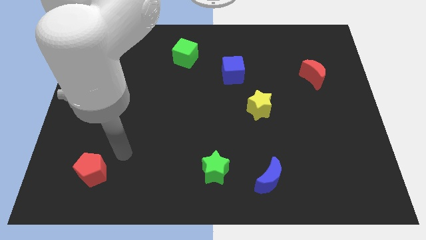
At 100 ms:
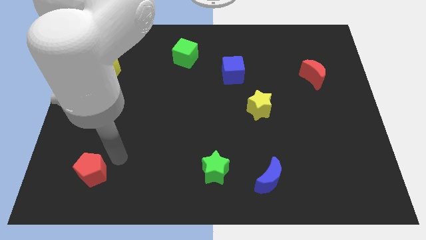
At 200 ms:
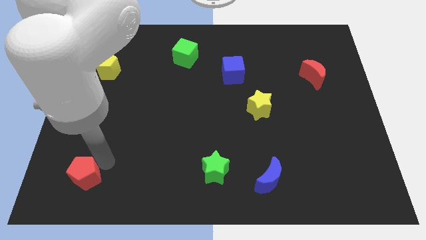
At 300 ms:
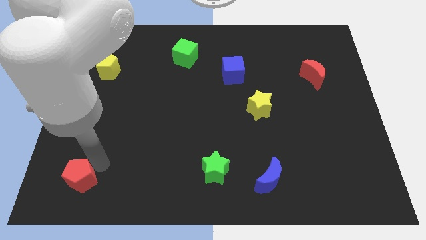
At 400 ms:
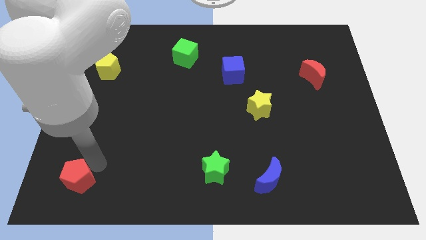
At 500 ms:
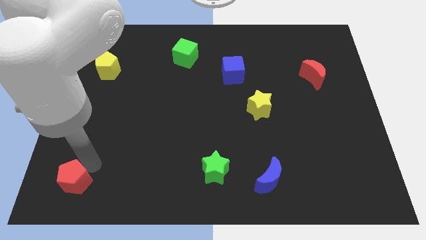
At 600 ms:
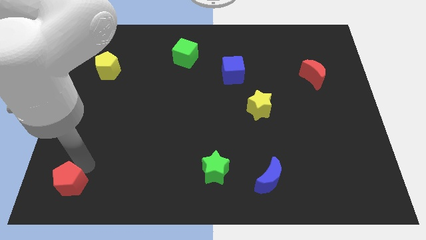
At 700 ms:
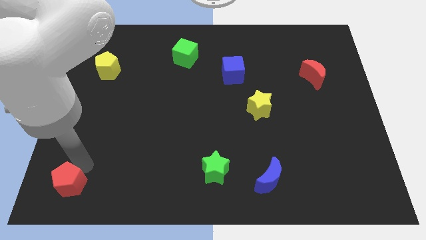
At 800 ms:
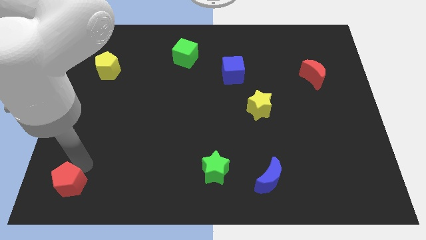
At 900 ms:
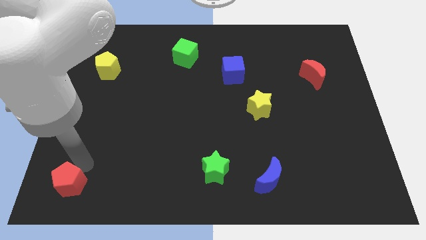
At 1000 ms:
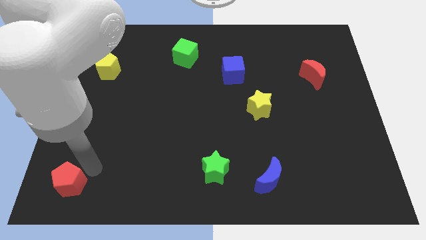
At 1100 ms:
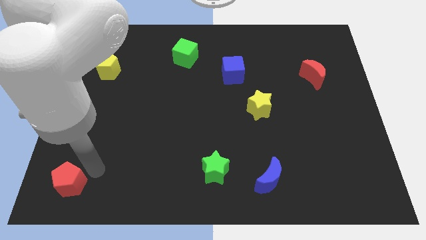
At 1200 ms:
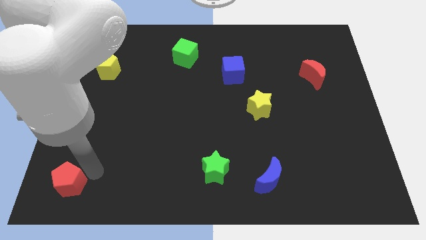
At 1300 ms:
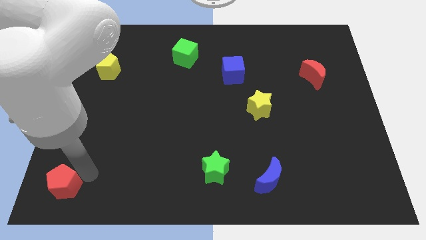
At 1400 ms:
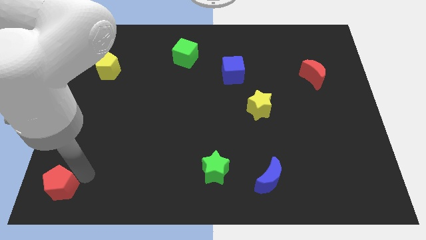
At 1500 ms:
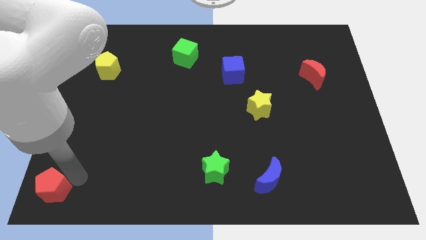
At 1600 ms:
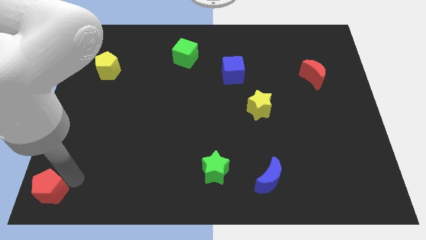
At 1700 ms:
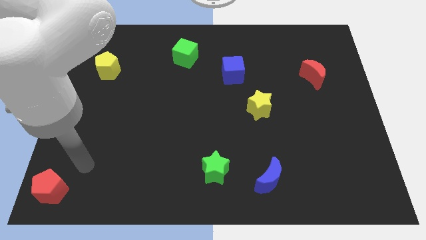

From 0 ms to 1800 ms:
move the red pentagon to the bottom left corner

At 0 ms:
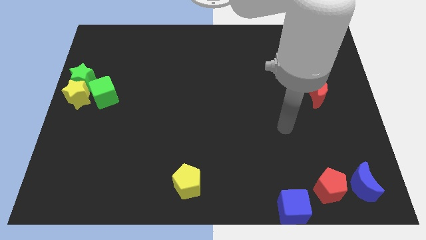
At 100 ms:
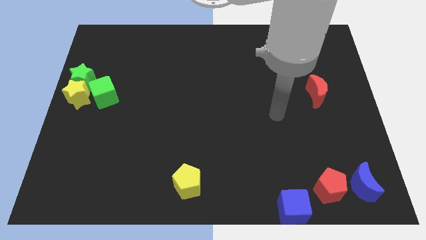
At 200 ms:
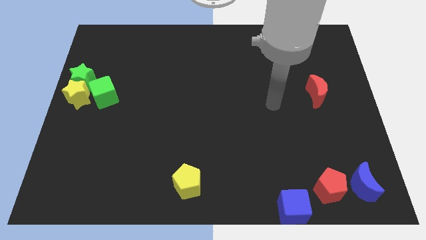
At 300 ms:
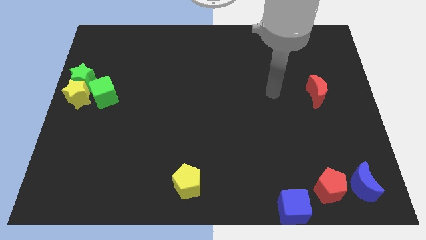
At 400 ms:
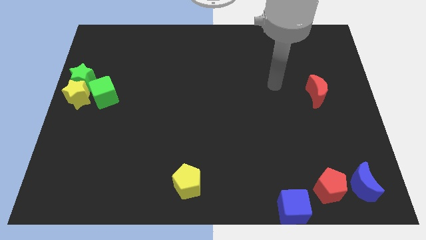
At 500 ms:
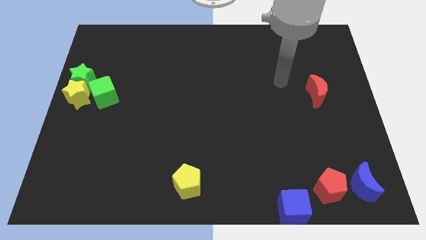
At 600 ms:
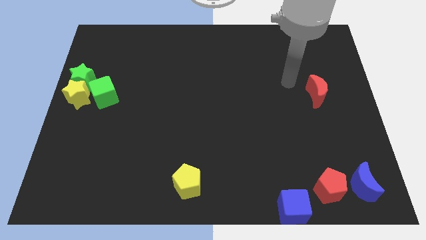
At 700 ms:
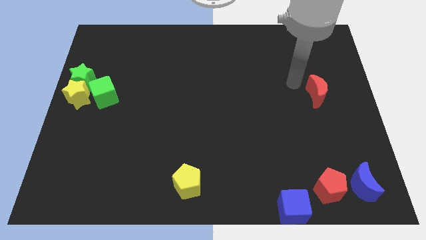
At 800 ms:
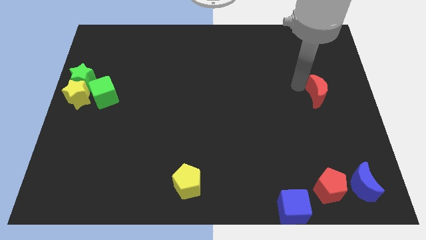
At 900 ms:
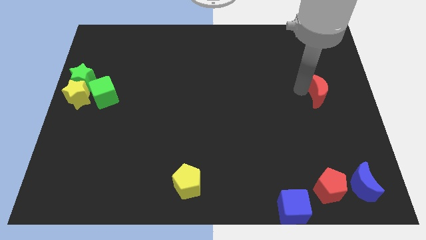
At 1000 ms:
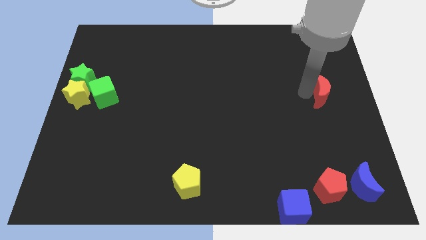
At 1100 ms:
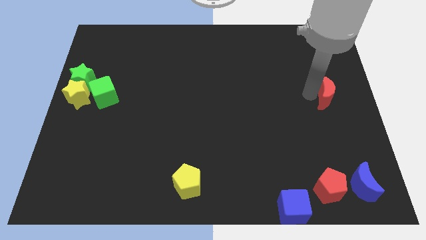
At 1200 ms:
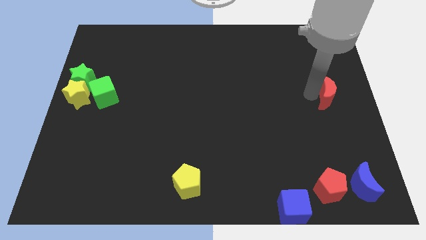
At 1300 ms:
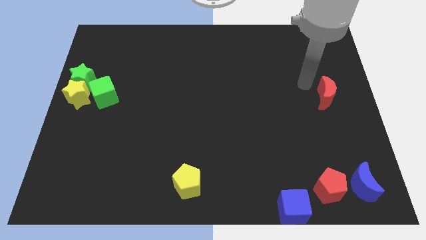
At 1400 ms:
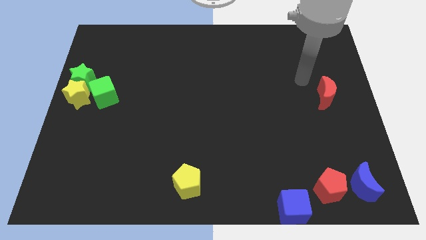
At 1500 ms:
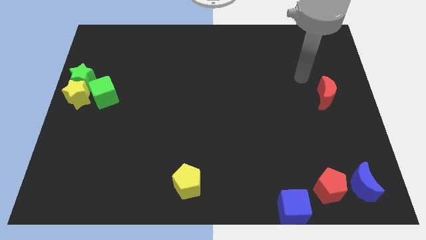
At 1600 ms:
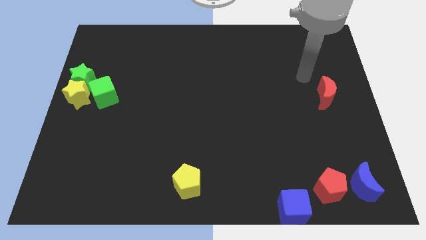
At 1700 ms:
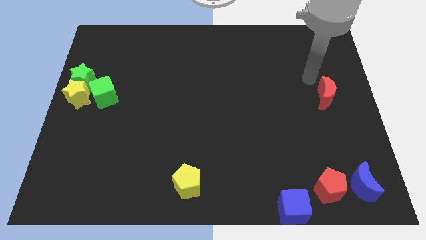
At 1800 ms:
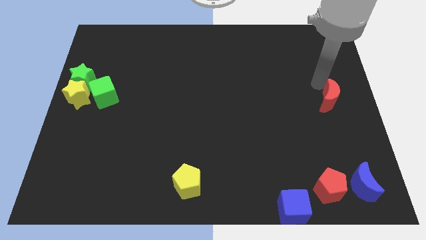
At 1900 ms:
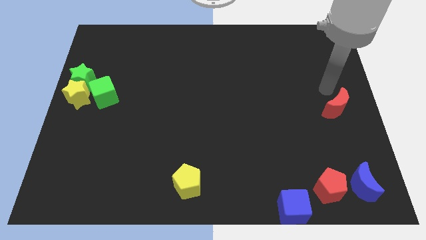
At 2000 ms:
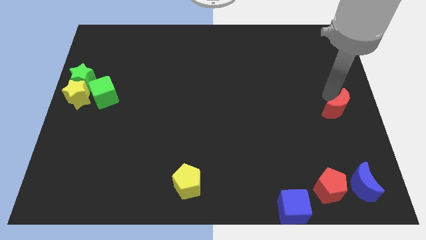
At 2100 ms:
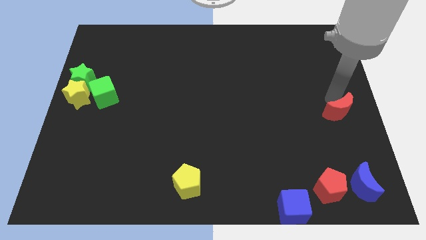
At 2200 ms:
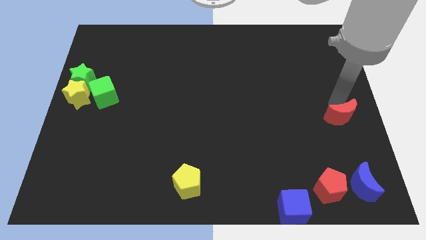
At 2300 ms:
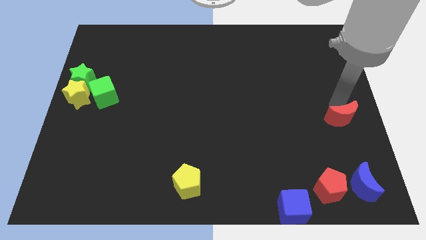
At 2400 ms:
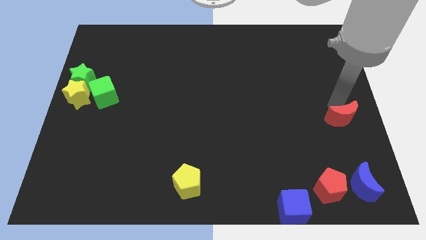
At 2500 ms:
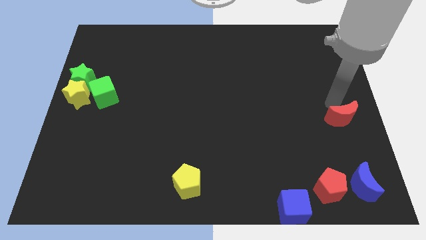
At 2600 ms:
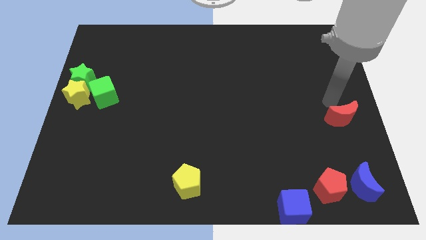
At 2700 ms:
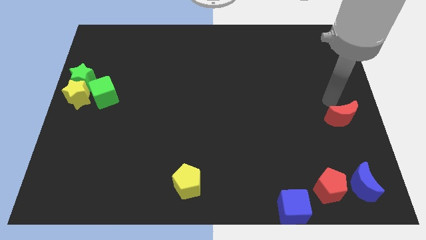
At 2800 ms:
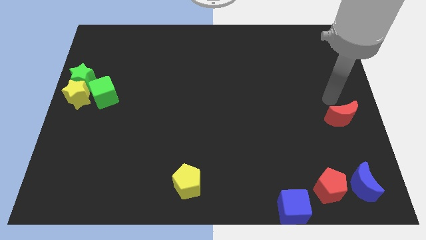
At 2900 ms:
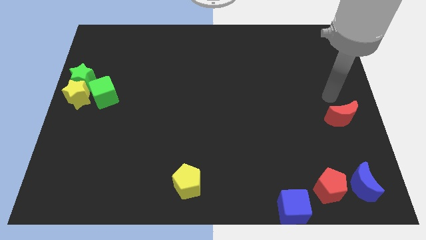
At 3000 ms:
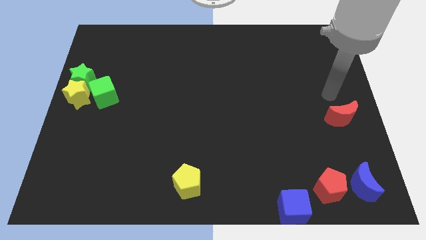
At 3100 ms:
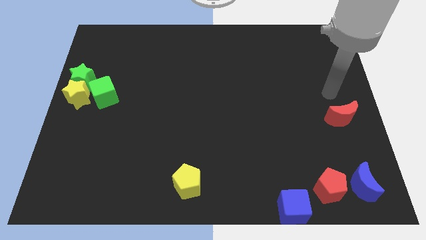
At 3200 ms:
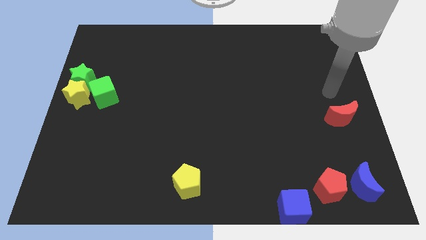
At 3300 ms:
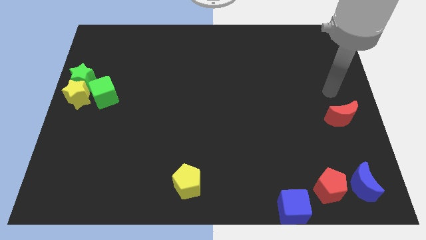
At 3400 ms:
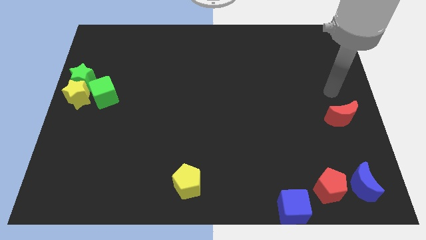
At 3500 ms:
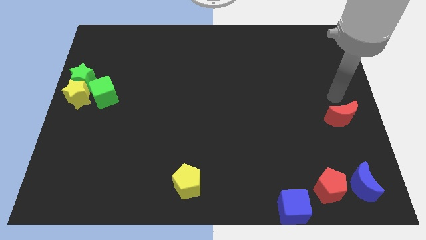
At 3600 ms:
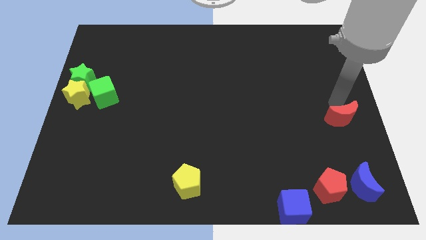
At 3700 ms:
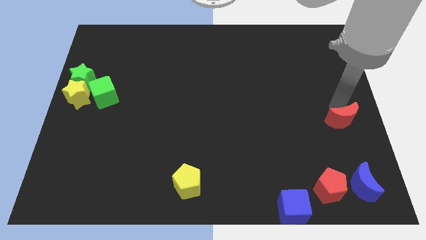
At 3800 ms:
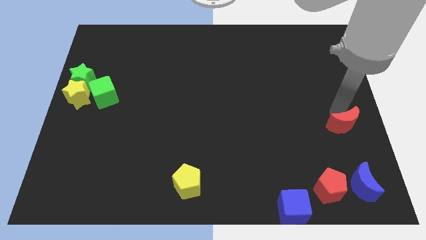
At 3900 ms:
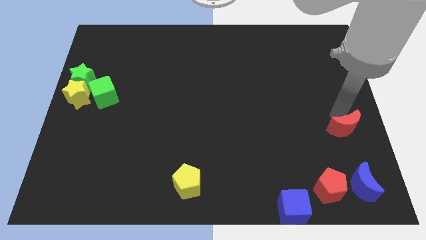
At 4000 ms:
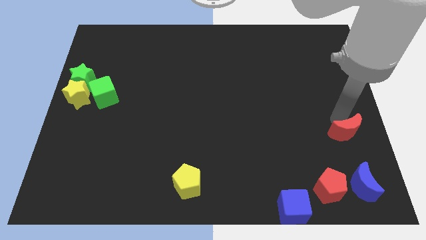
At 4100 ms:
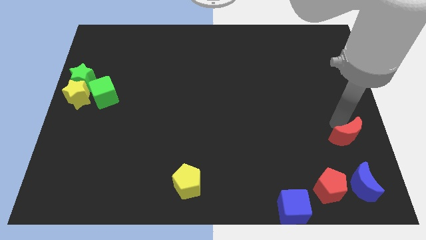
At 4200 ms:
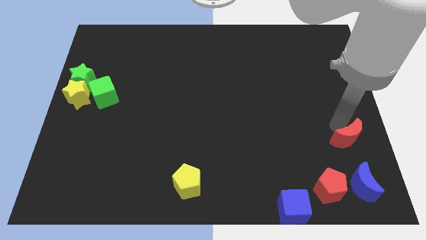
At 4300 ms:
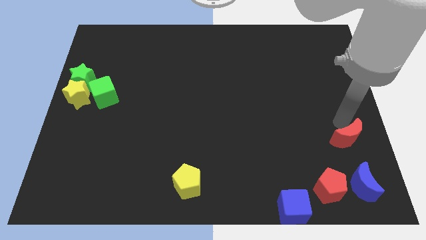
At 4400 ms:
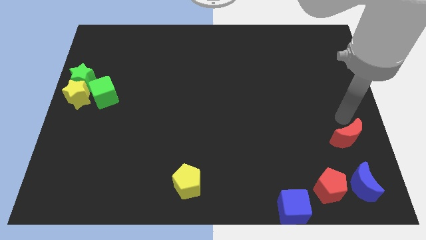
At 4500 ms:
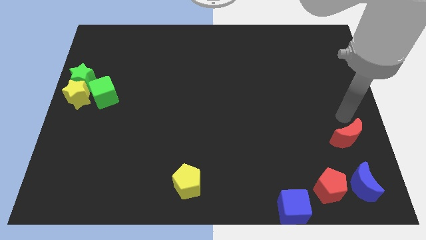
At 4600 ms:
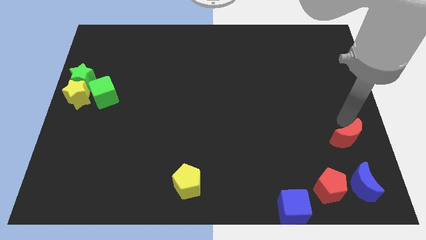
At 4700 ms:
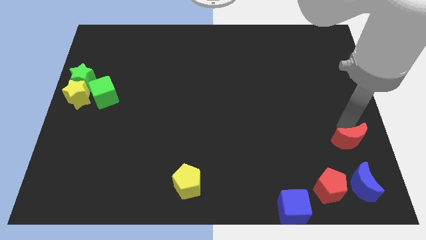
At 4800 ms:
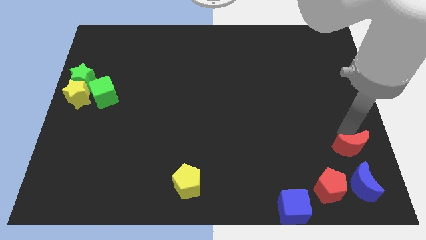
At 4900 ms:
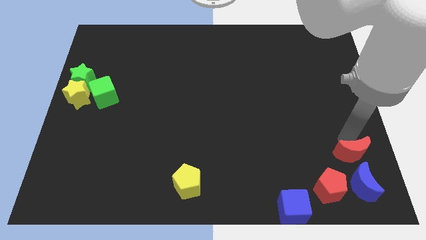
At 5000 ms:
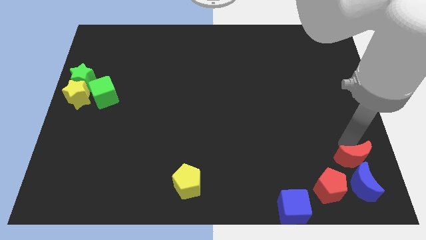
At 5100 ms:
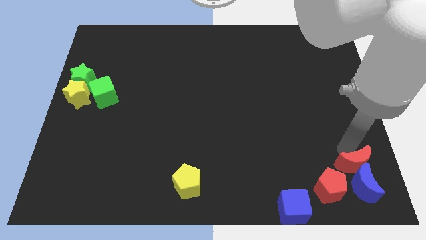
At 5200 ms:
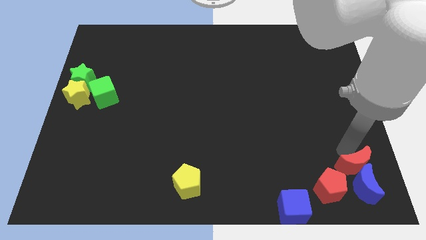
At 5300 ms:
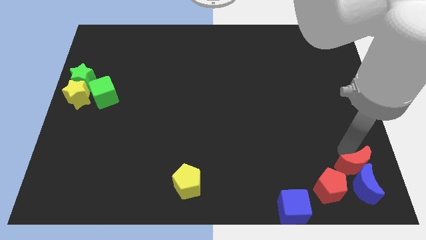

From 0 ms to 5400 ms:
push the red crescent into the top side of the blue crescent

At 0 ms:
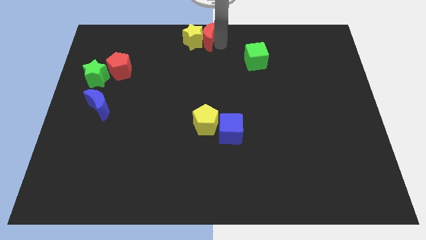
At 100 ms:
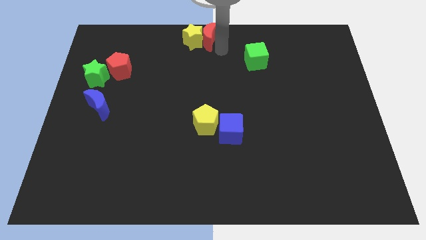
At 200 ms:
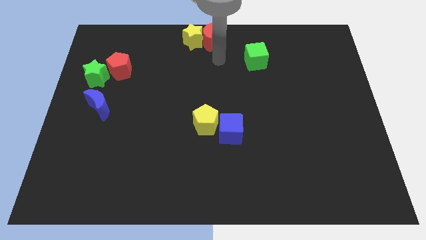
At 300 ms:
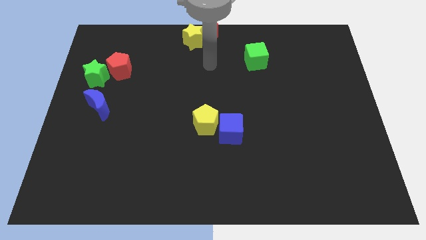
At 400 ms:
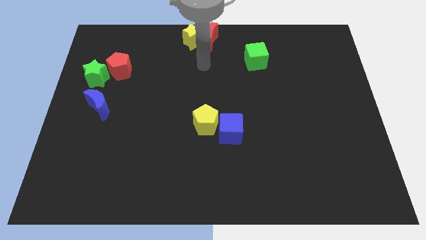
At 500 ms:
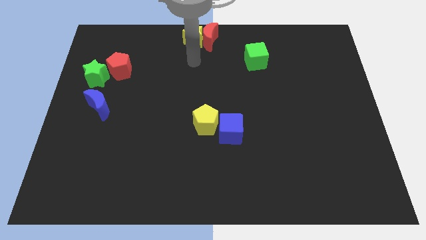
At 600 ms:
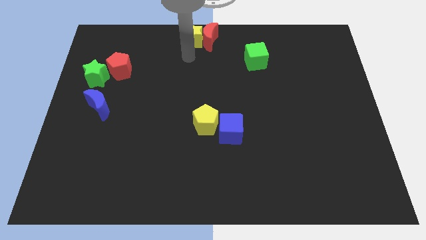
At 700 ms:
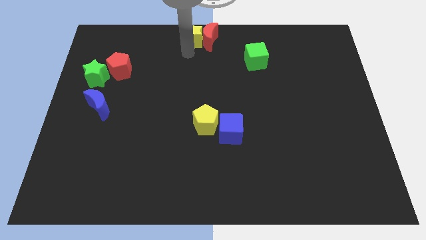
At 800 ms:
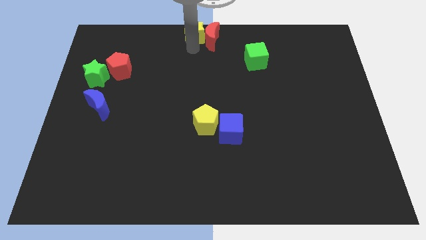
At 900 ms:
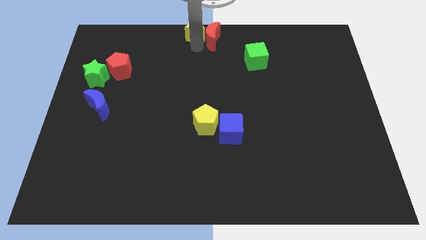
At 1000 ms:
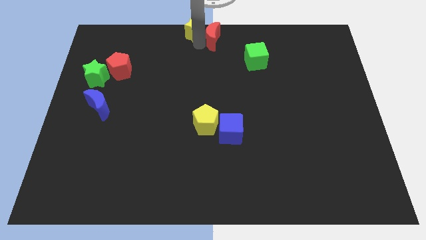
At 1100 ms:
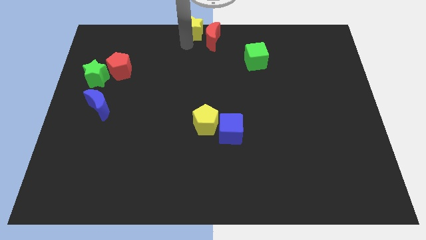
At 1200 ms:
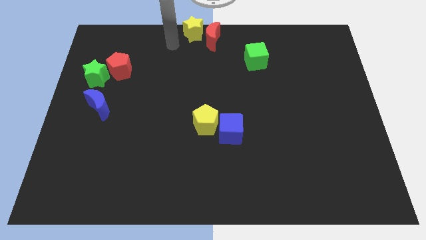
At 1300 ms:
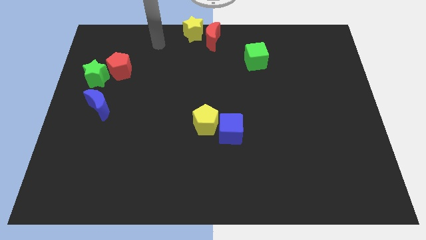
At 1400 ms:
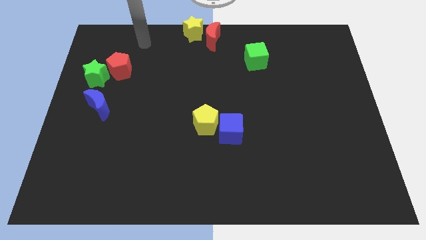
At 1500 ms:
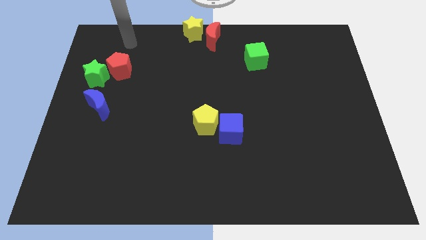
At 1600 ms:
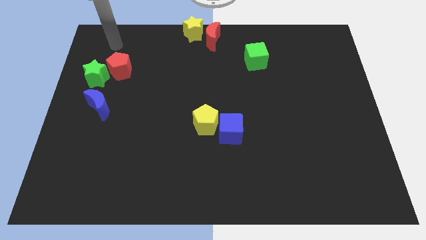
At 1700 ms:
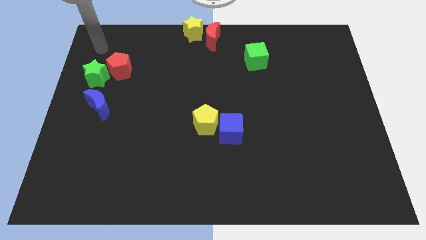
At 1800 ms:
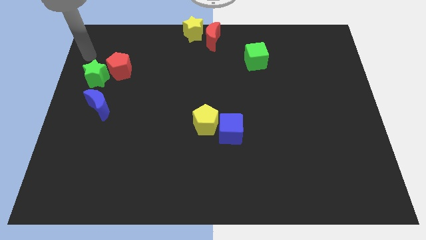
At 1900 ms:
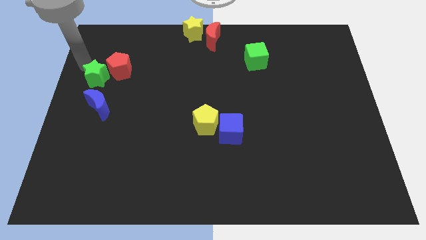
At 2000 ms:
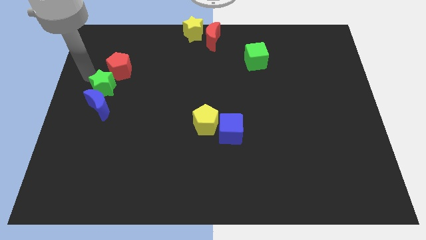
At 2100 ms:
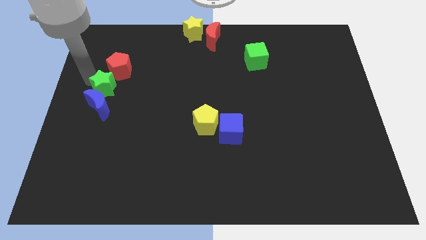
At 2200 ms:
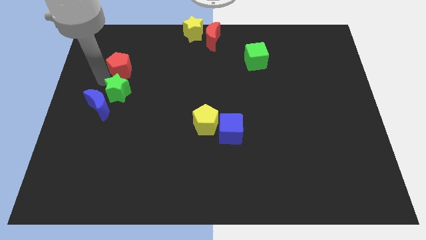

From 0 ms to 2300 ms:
touch the top left of the green star
